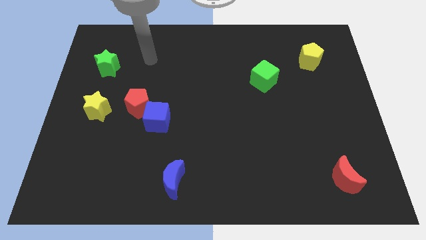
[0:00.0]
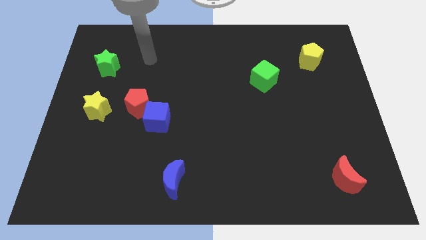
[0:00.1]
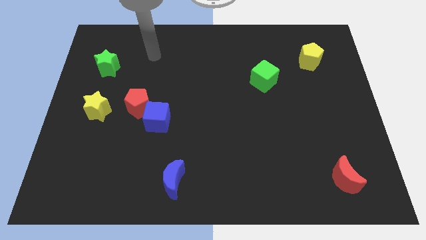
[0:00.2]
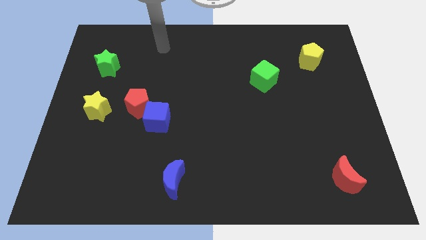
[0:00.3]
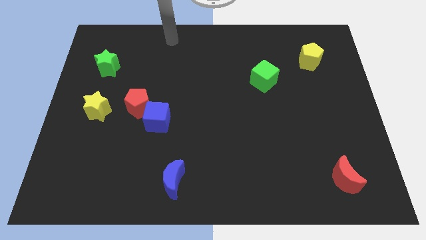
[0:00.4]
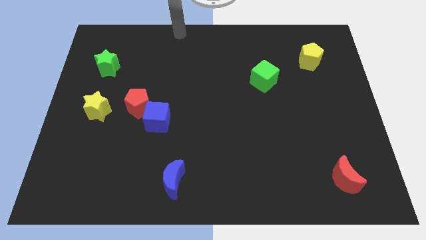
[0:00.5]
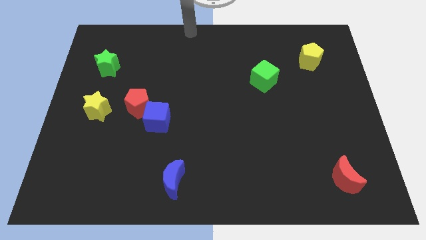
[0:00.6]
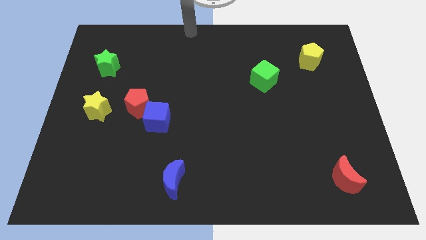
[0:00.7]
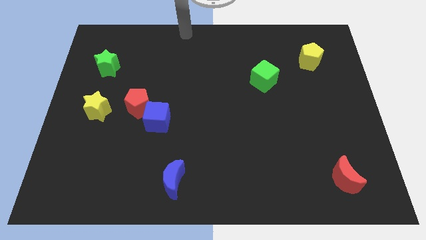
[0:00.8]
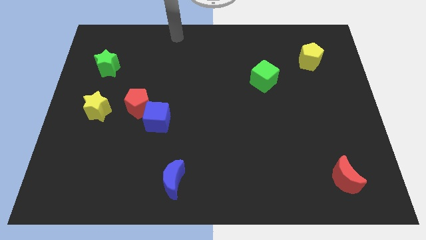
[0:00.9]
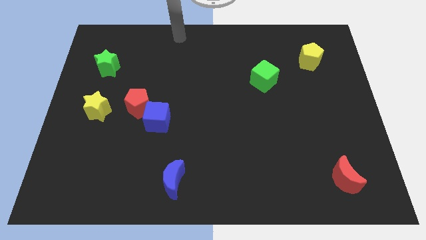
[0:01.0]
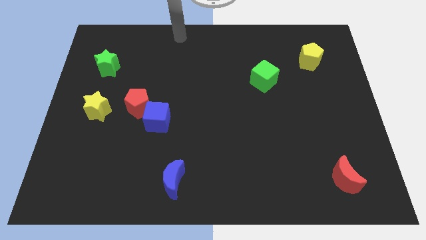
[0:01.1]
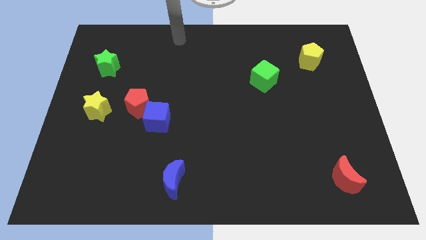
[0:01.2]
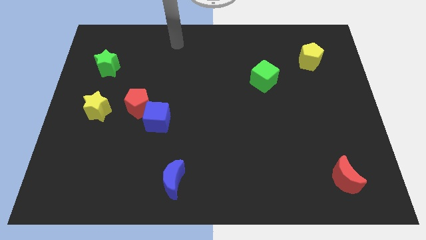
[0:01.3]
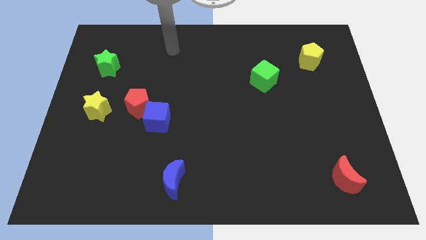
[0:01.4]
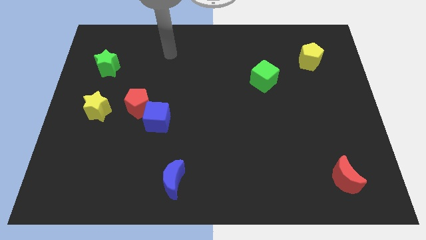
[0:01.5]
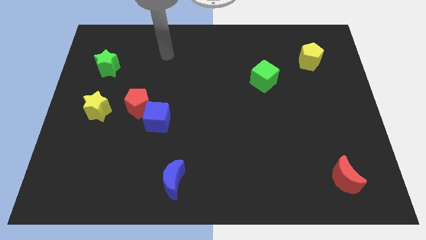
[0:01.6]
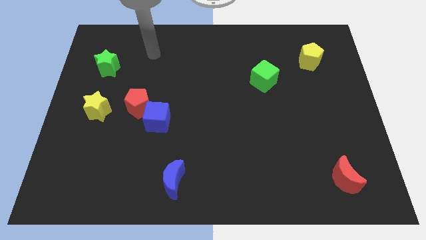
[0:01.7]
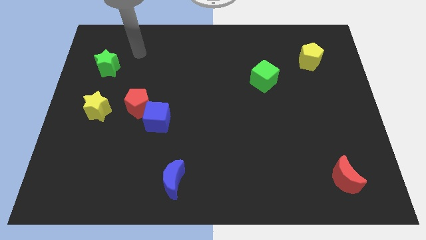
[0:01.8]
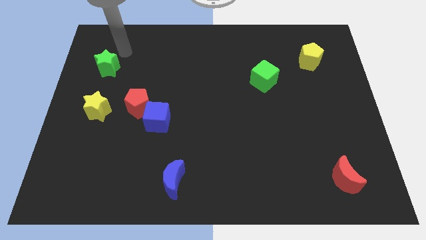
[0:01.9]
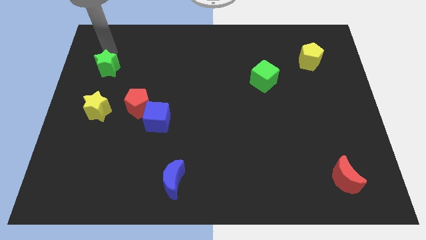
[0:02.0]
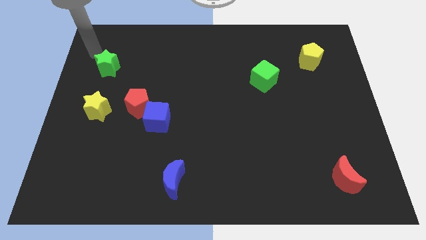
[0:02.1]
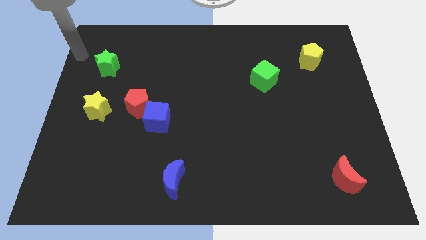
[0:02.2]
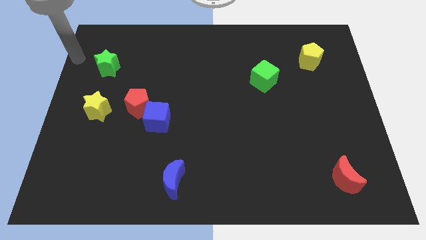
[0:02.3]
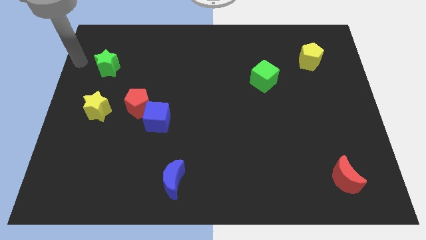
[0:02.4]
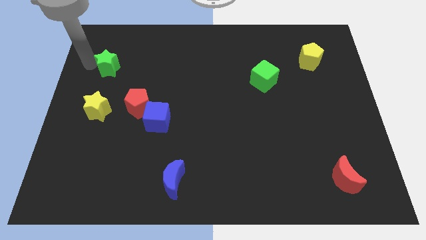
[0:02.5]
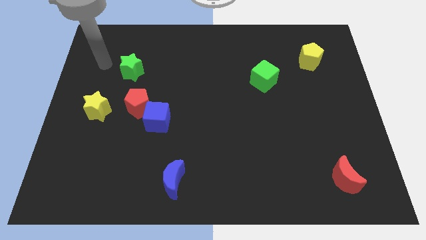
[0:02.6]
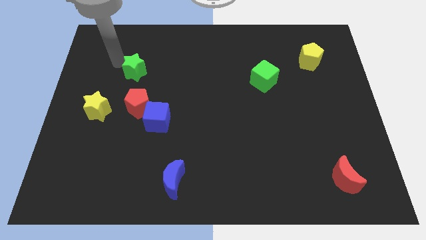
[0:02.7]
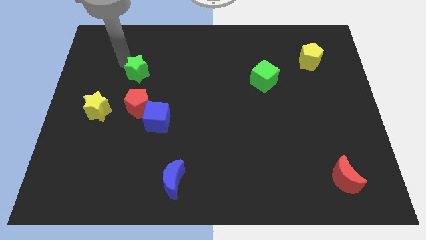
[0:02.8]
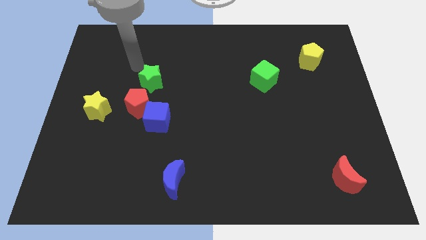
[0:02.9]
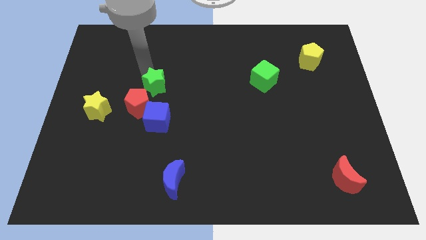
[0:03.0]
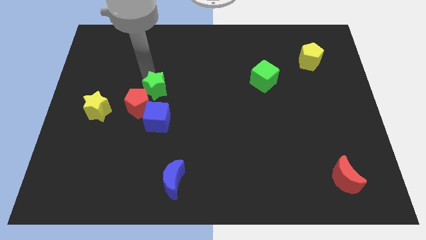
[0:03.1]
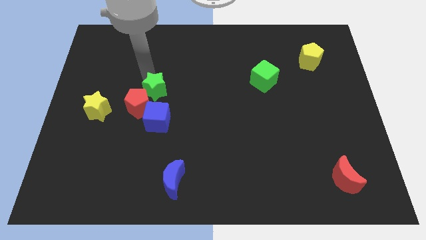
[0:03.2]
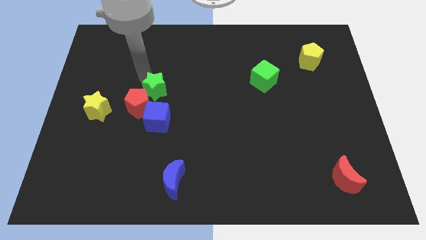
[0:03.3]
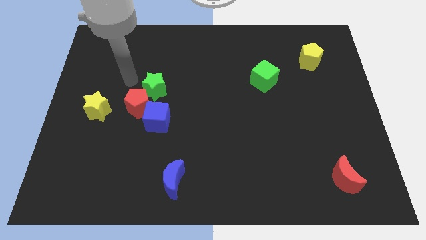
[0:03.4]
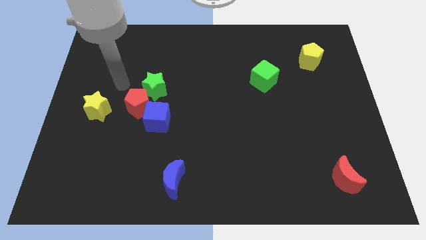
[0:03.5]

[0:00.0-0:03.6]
slide the green star towards the blue cube

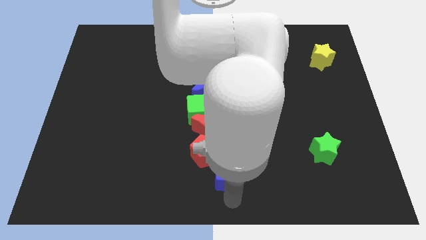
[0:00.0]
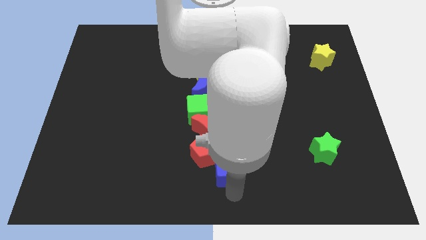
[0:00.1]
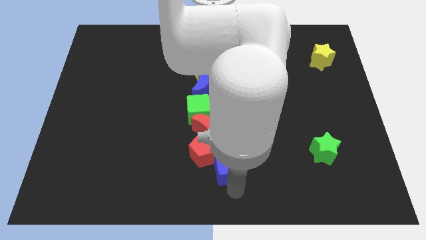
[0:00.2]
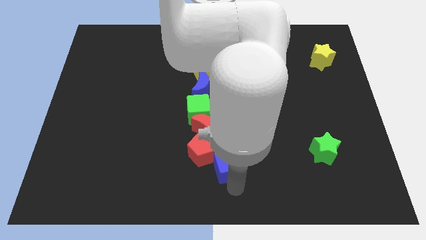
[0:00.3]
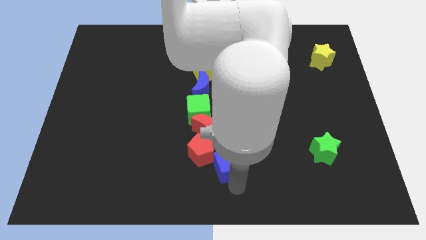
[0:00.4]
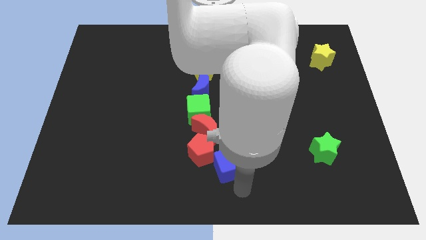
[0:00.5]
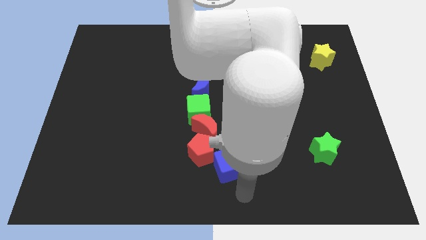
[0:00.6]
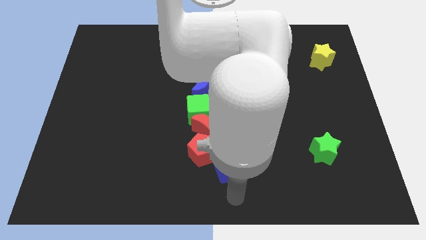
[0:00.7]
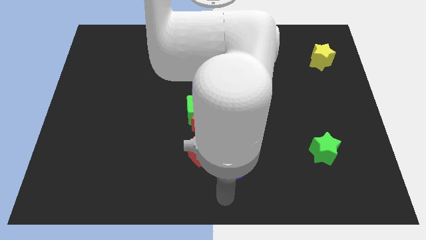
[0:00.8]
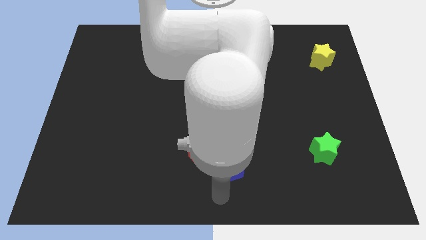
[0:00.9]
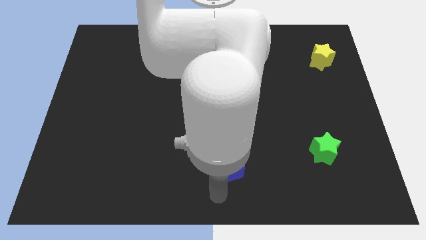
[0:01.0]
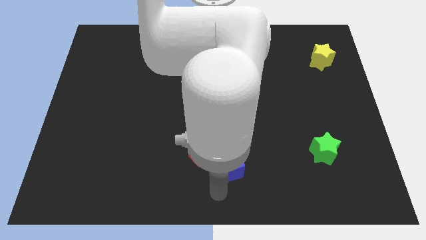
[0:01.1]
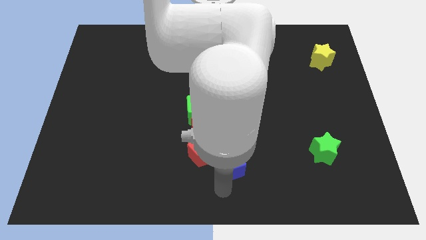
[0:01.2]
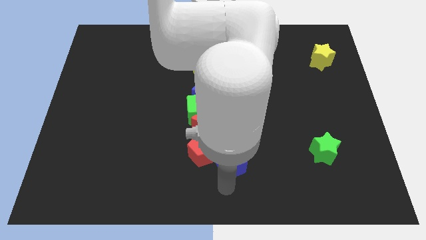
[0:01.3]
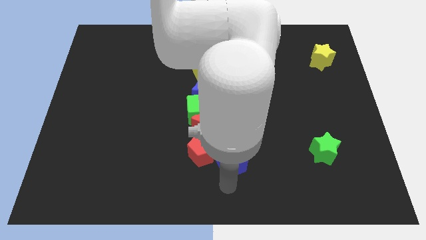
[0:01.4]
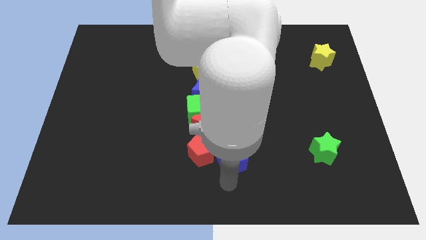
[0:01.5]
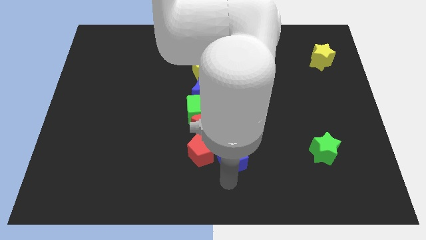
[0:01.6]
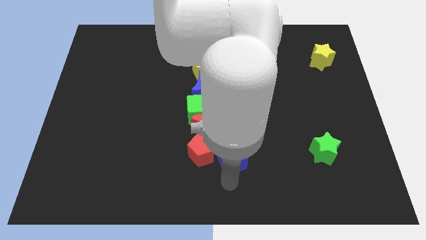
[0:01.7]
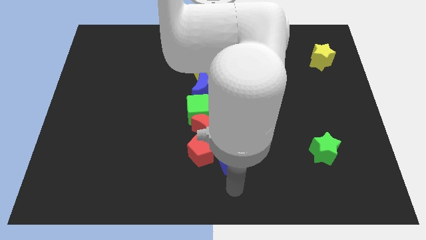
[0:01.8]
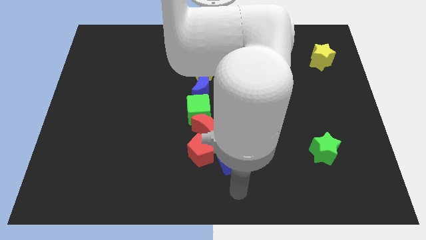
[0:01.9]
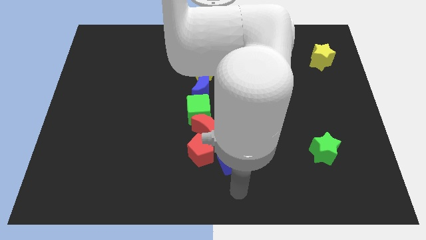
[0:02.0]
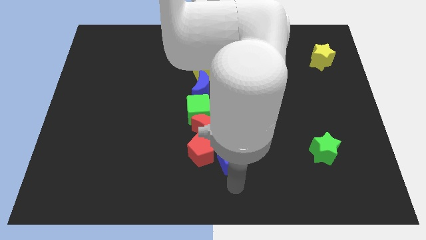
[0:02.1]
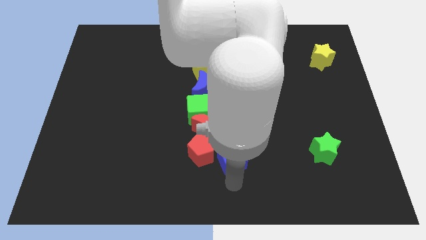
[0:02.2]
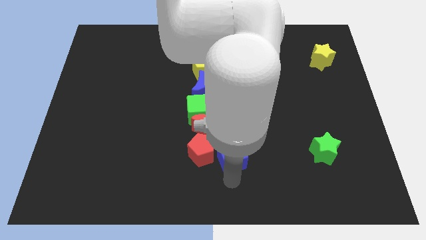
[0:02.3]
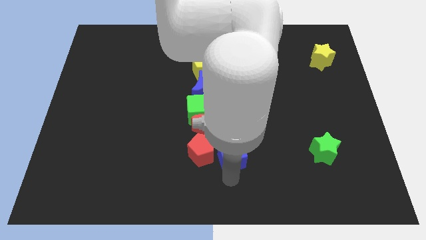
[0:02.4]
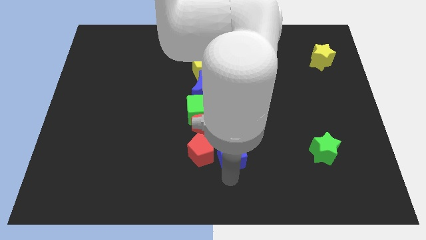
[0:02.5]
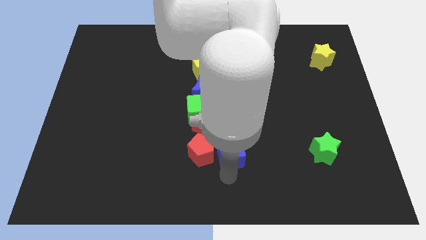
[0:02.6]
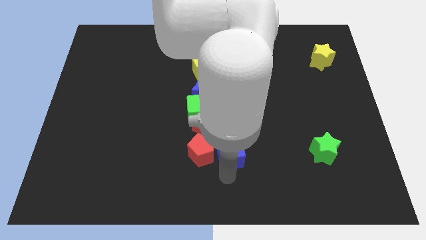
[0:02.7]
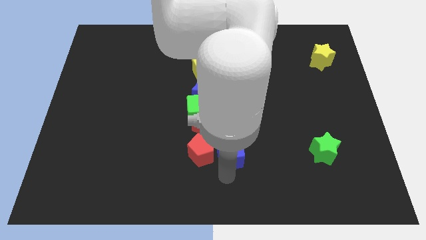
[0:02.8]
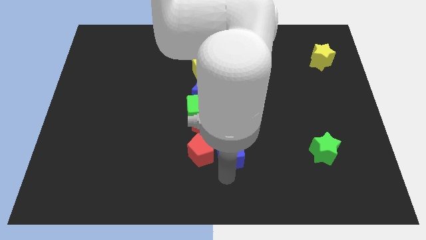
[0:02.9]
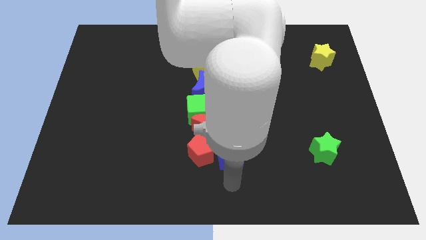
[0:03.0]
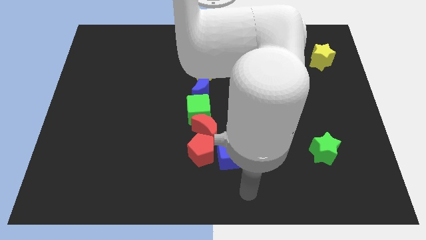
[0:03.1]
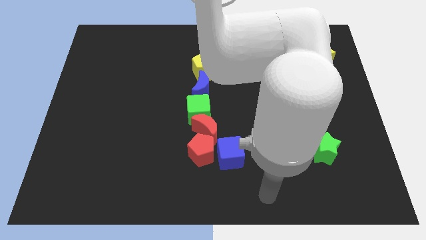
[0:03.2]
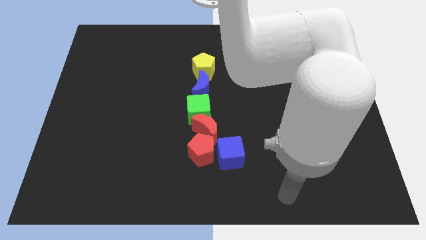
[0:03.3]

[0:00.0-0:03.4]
place the blue cube to the right of the red pentagon

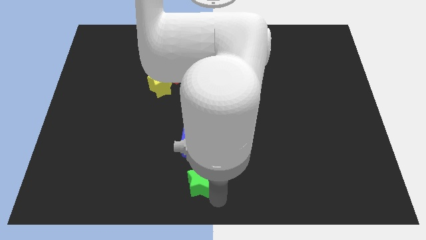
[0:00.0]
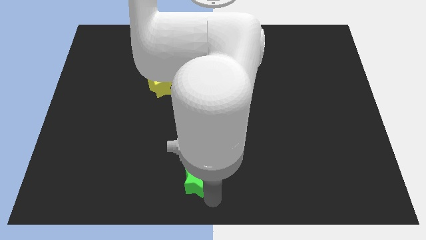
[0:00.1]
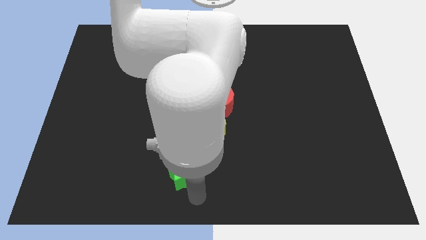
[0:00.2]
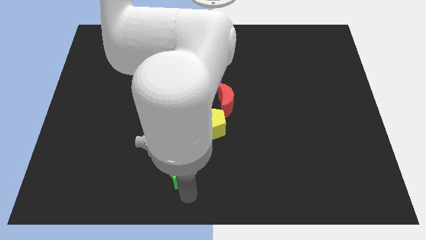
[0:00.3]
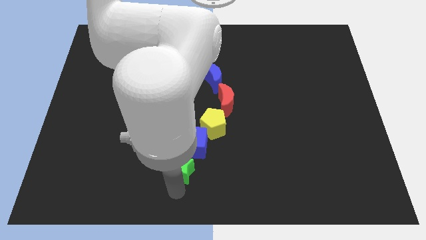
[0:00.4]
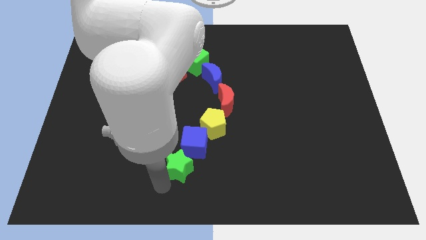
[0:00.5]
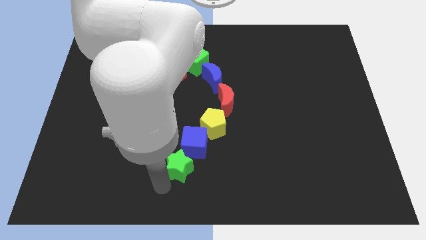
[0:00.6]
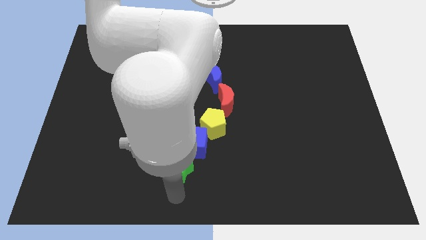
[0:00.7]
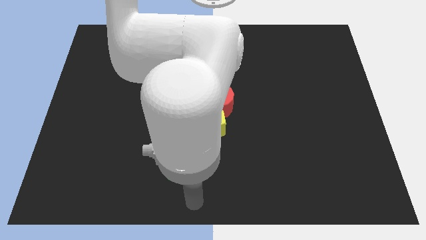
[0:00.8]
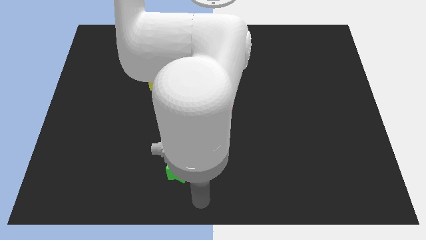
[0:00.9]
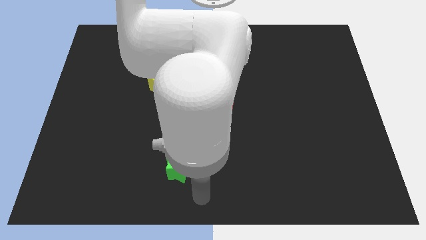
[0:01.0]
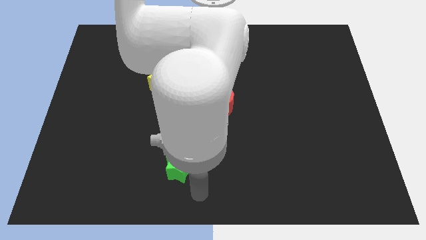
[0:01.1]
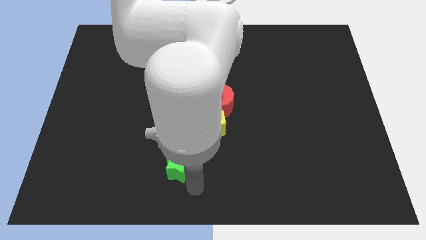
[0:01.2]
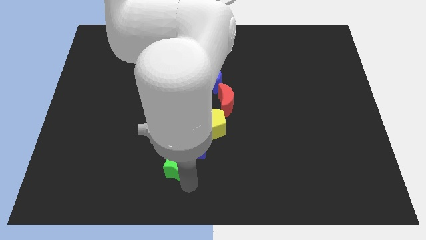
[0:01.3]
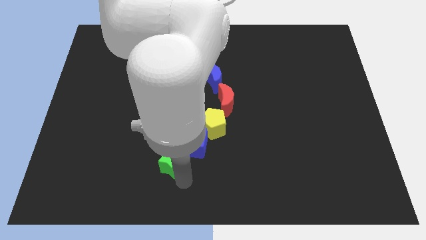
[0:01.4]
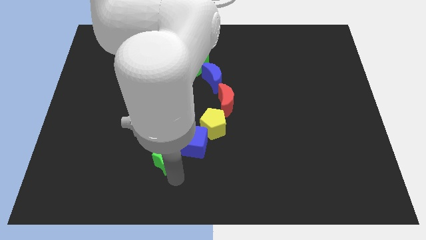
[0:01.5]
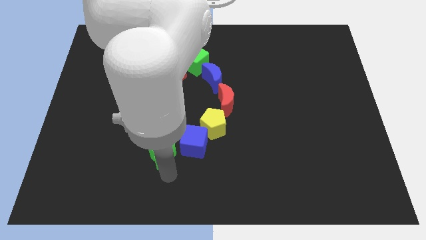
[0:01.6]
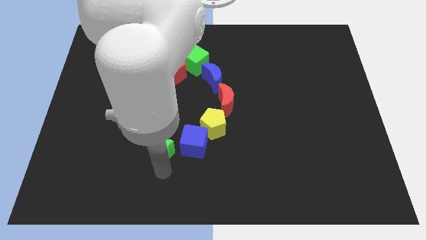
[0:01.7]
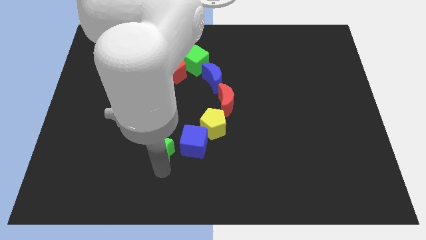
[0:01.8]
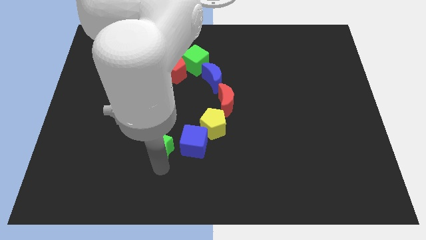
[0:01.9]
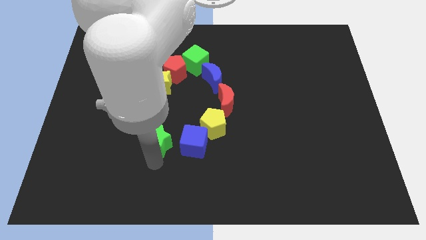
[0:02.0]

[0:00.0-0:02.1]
move the green star left to the blue cube

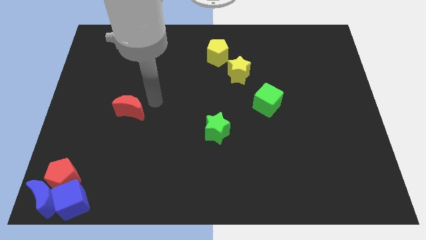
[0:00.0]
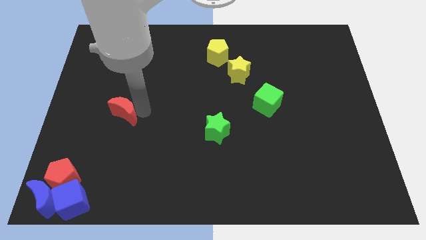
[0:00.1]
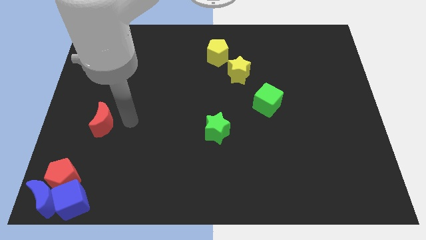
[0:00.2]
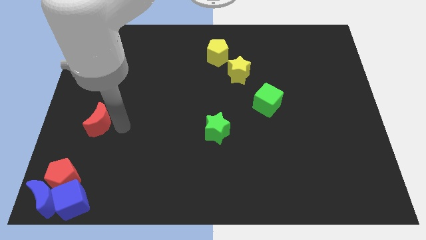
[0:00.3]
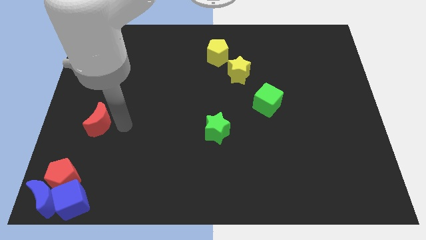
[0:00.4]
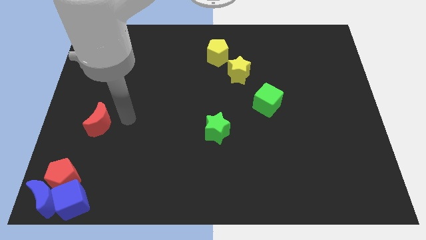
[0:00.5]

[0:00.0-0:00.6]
push the red crescent towards the left side of the board
